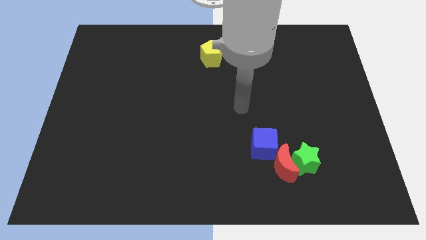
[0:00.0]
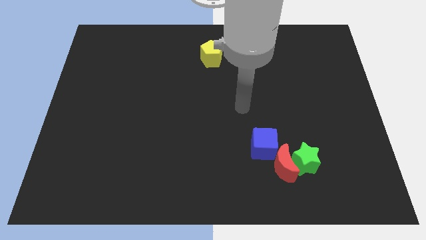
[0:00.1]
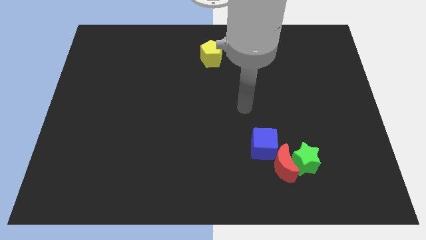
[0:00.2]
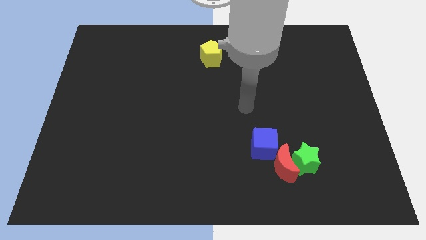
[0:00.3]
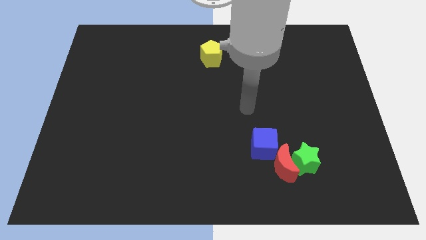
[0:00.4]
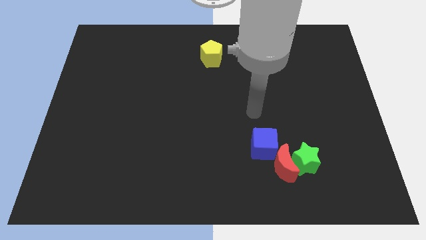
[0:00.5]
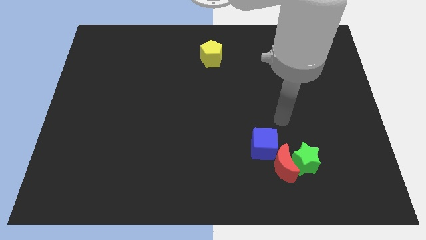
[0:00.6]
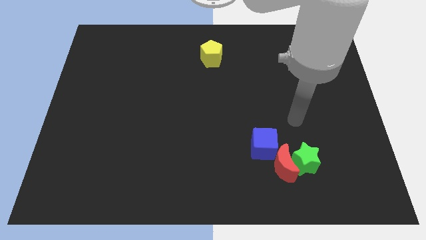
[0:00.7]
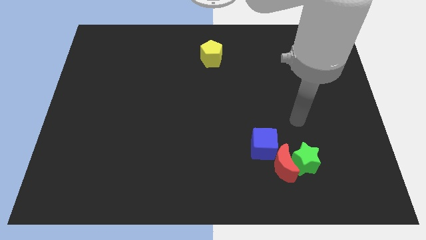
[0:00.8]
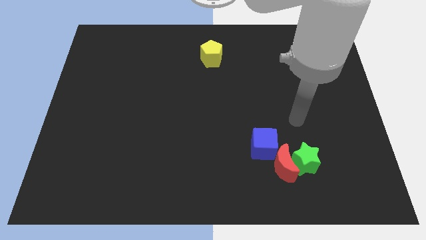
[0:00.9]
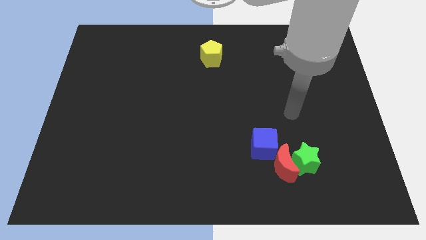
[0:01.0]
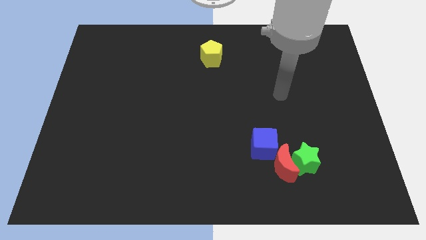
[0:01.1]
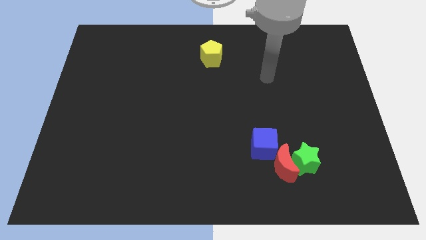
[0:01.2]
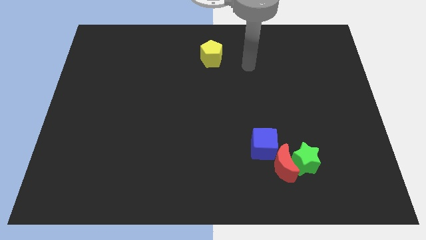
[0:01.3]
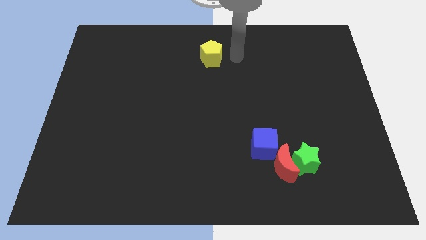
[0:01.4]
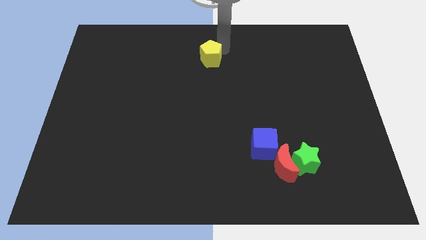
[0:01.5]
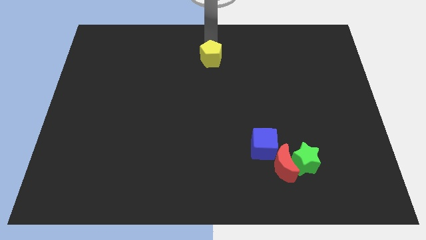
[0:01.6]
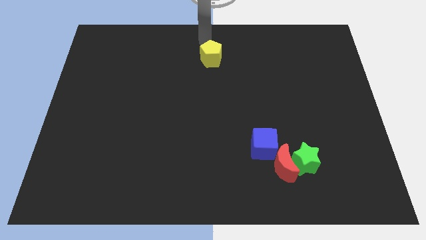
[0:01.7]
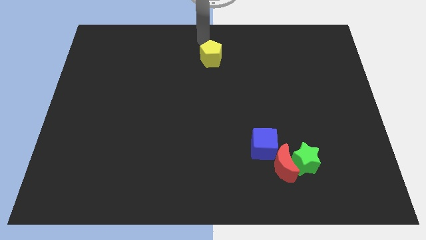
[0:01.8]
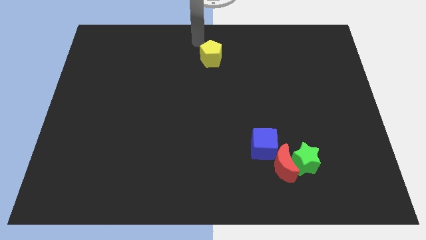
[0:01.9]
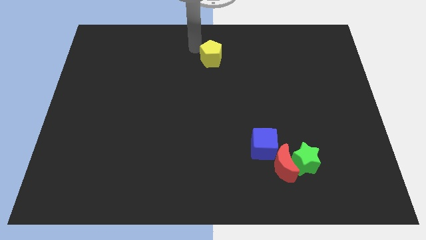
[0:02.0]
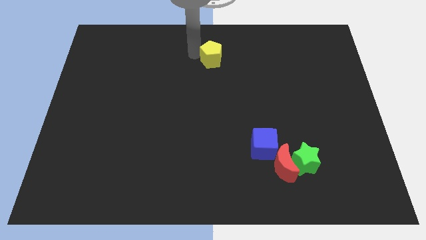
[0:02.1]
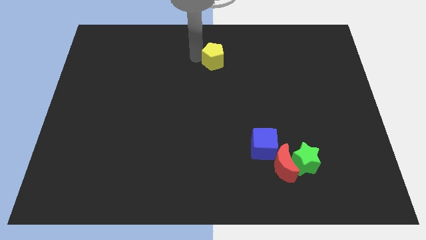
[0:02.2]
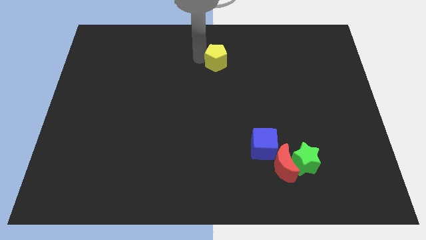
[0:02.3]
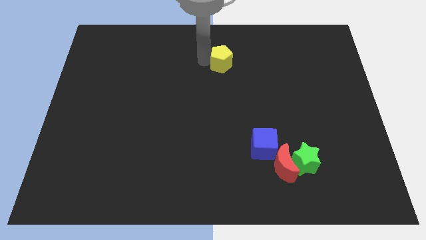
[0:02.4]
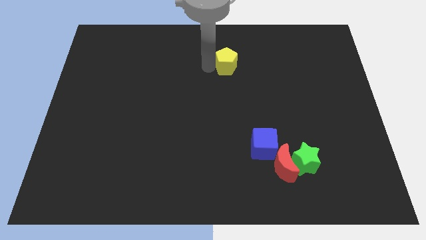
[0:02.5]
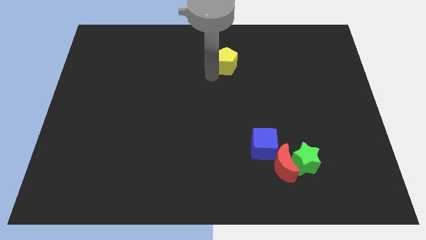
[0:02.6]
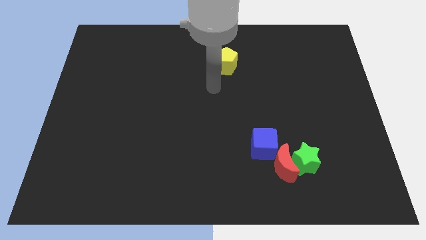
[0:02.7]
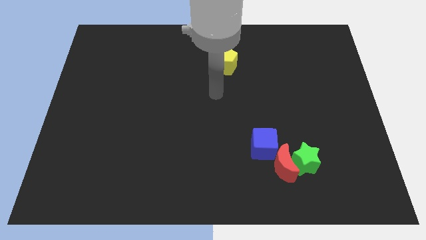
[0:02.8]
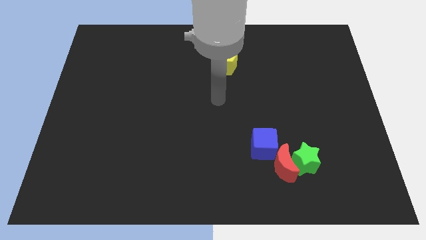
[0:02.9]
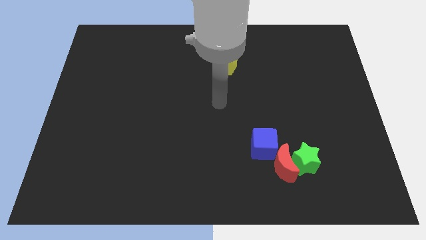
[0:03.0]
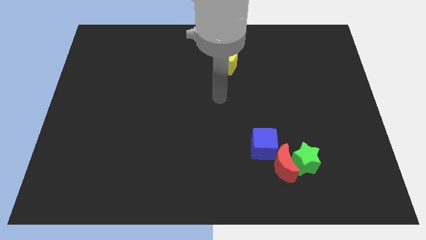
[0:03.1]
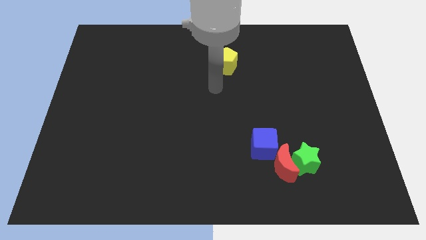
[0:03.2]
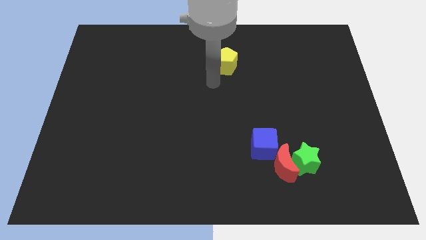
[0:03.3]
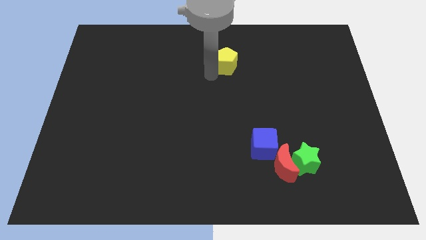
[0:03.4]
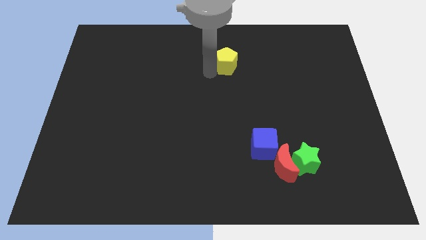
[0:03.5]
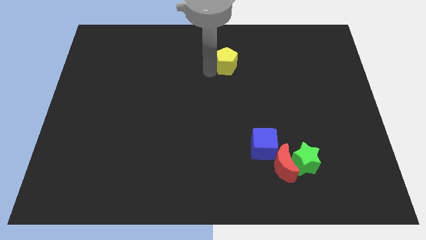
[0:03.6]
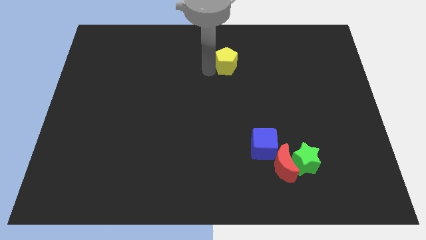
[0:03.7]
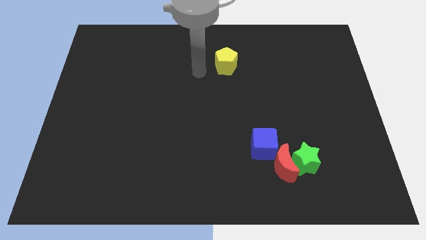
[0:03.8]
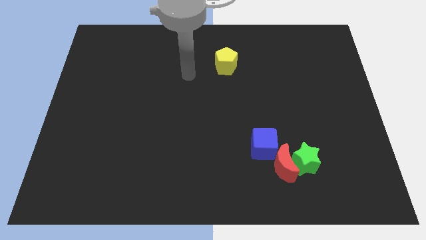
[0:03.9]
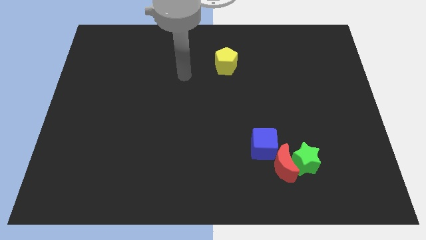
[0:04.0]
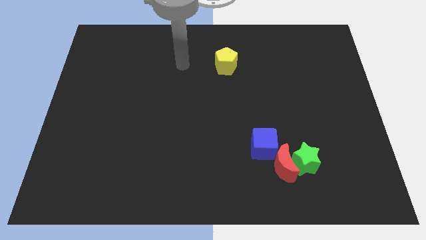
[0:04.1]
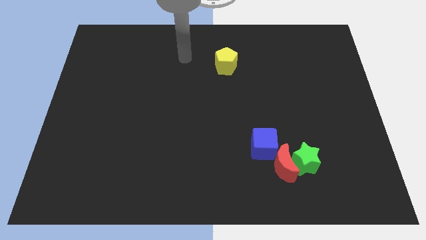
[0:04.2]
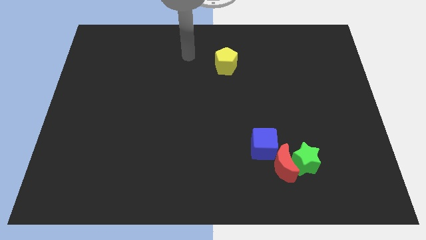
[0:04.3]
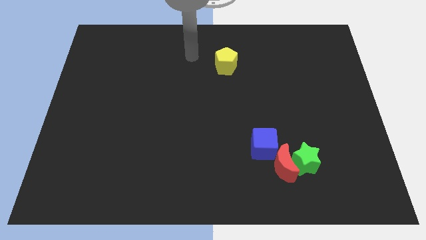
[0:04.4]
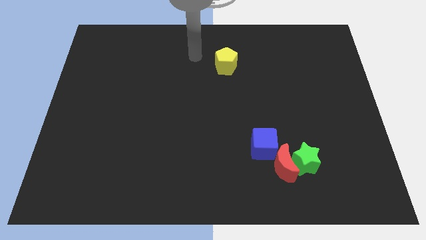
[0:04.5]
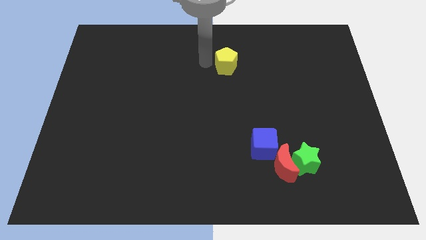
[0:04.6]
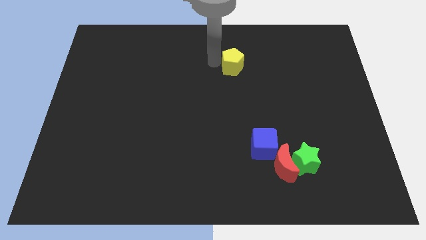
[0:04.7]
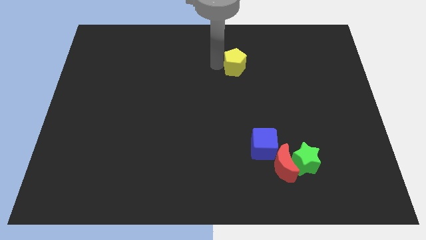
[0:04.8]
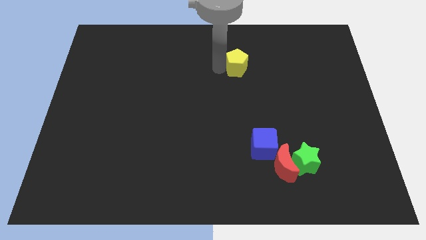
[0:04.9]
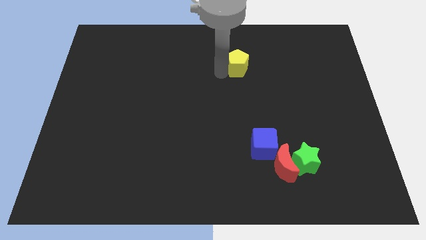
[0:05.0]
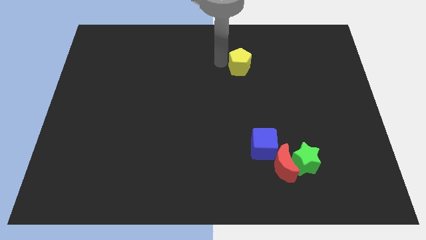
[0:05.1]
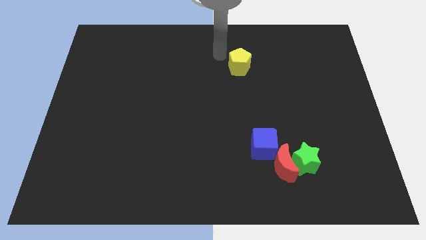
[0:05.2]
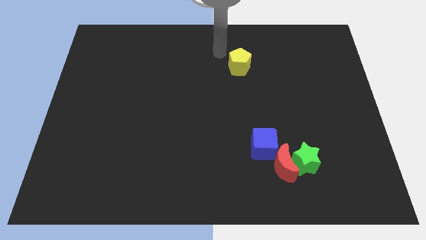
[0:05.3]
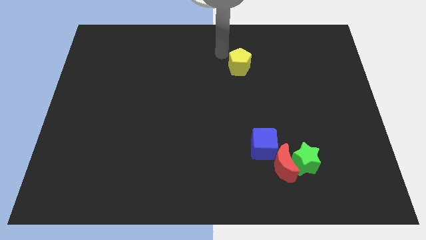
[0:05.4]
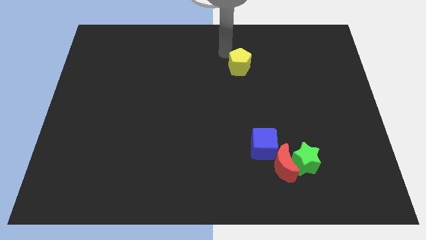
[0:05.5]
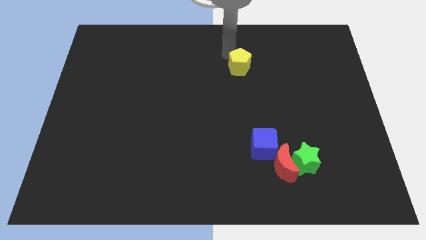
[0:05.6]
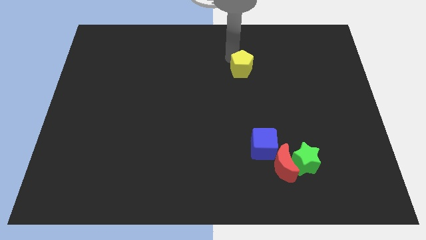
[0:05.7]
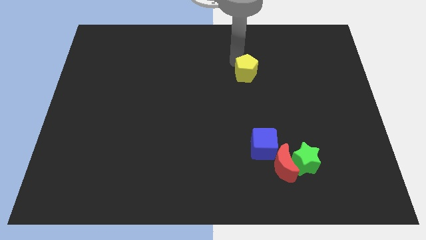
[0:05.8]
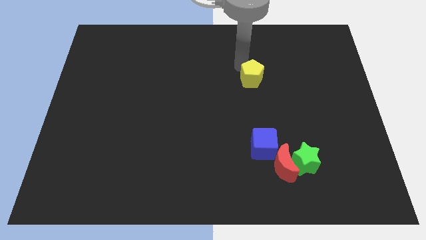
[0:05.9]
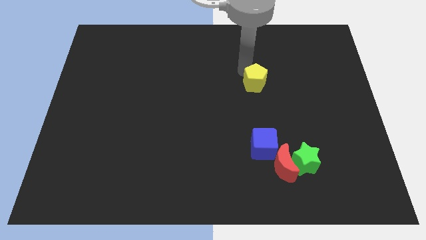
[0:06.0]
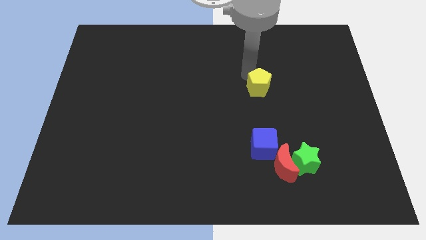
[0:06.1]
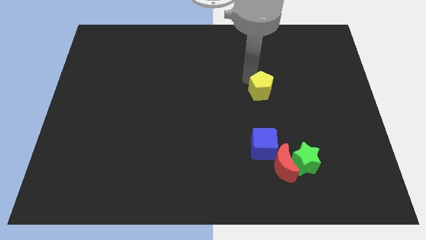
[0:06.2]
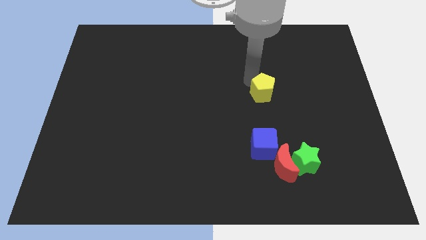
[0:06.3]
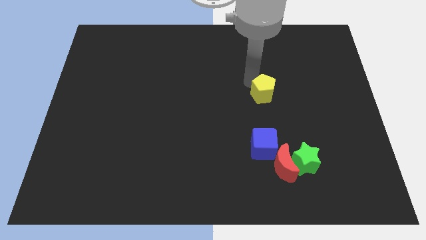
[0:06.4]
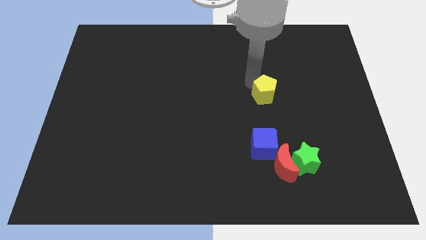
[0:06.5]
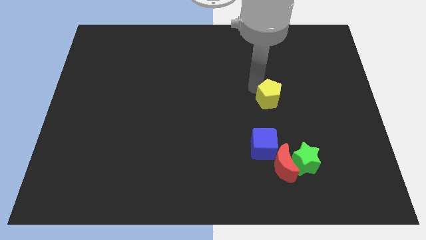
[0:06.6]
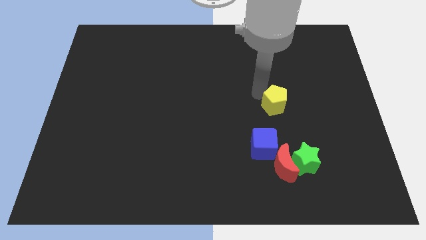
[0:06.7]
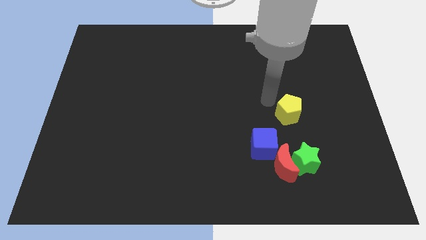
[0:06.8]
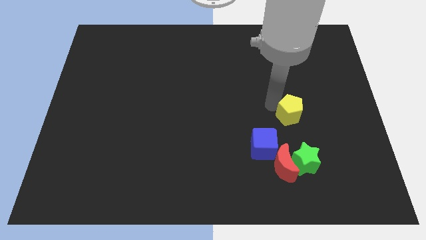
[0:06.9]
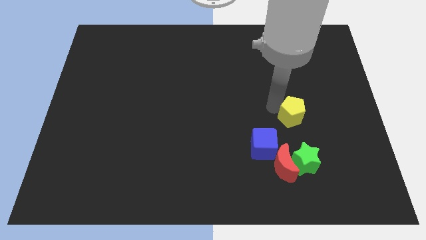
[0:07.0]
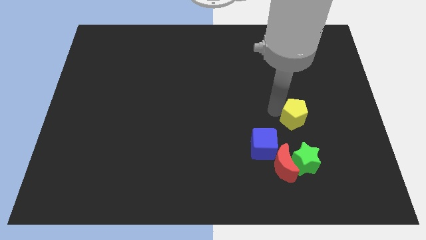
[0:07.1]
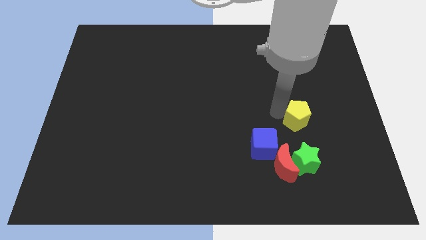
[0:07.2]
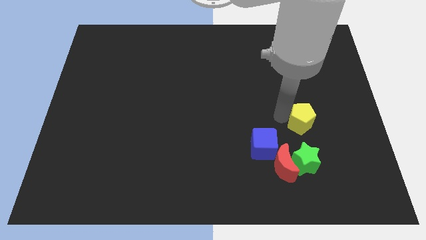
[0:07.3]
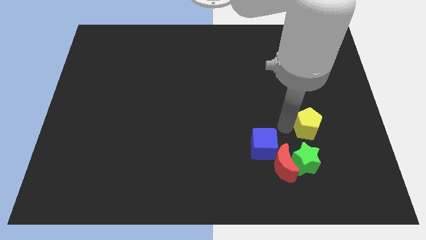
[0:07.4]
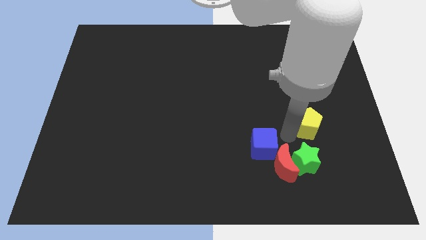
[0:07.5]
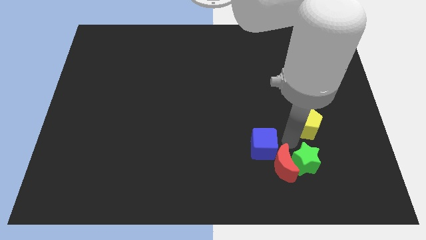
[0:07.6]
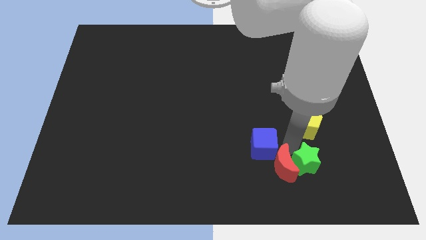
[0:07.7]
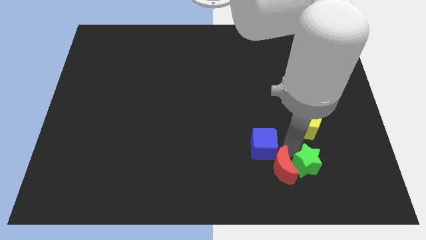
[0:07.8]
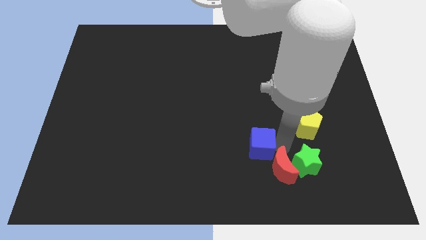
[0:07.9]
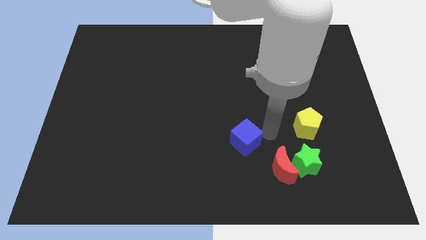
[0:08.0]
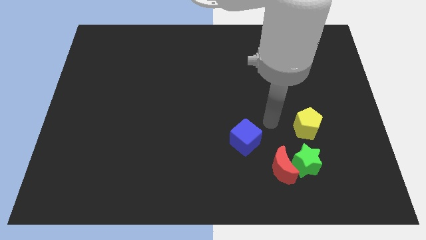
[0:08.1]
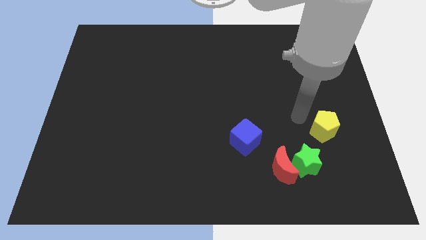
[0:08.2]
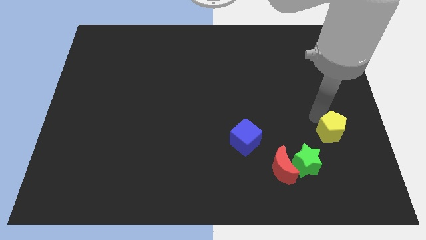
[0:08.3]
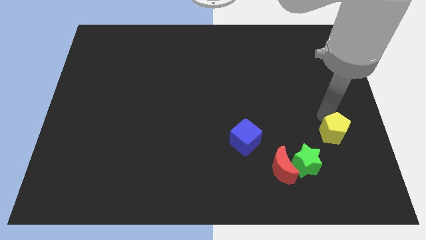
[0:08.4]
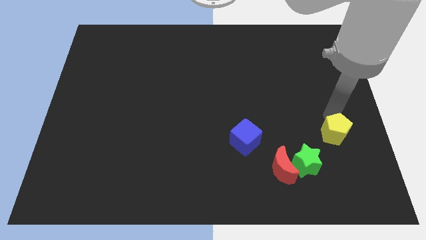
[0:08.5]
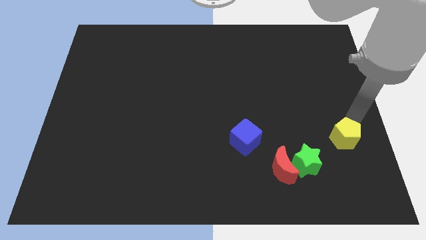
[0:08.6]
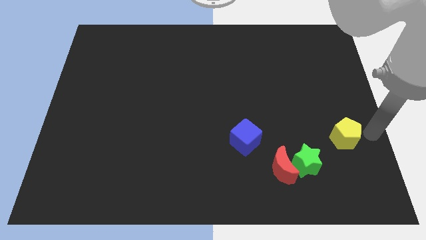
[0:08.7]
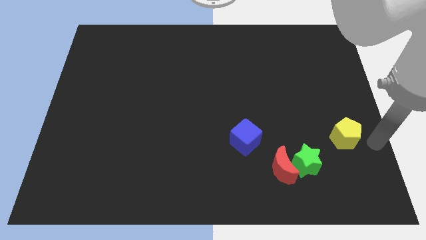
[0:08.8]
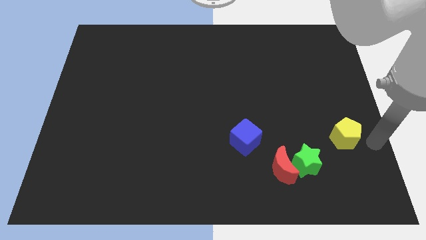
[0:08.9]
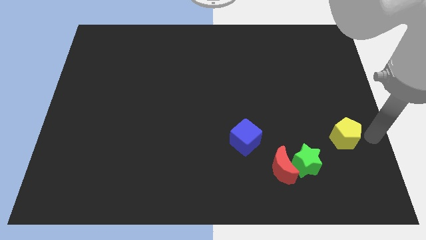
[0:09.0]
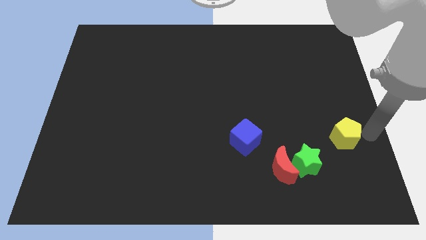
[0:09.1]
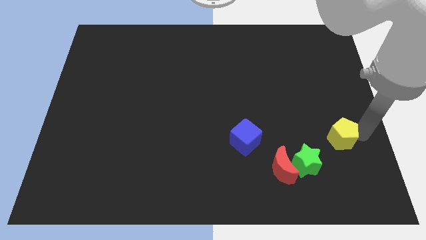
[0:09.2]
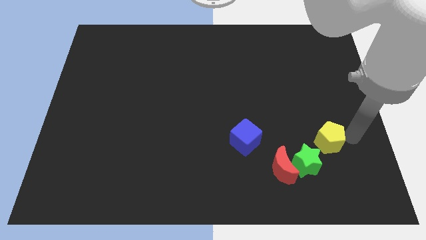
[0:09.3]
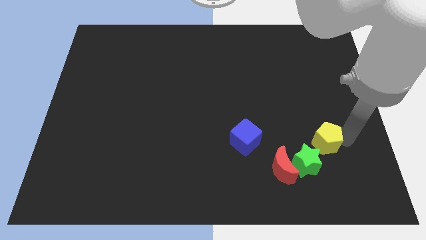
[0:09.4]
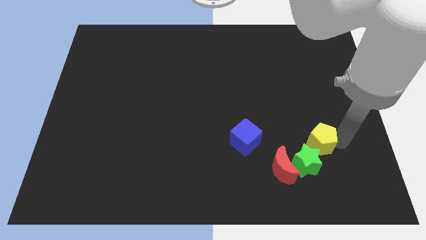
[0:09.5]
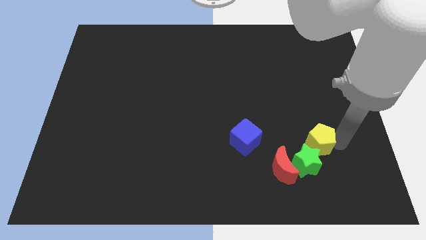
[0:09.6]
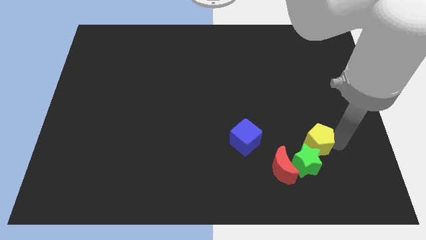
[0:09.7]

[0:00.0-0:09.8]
move the pentagon close to the green star
